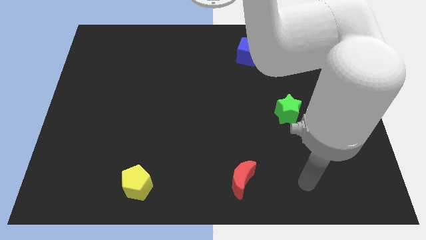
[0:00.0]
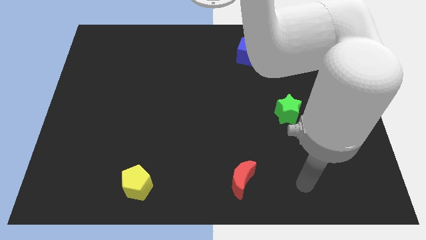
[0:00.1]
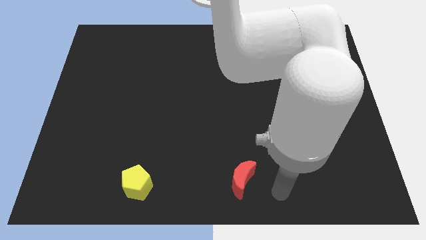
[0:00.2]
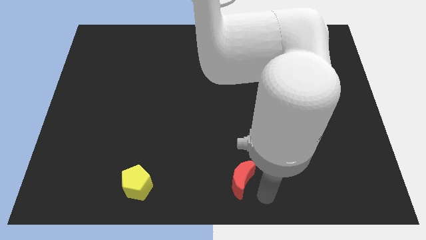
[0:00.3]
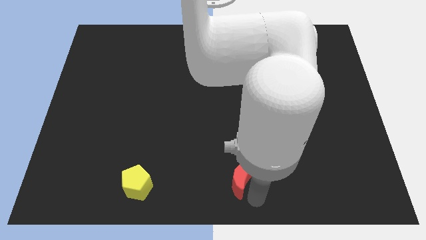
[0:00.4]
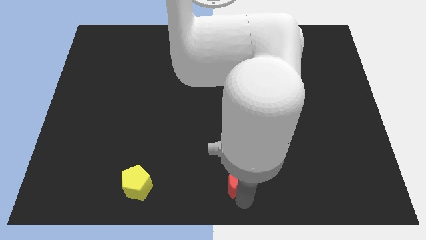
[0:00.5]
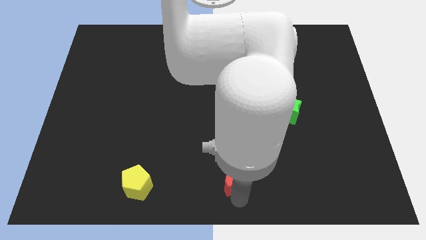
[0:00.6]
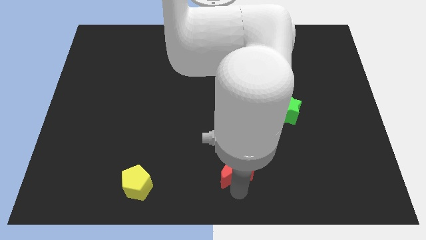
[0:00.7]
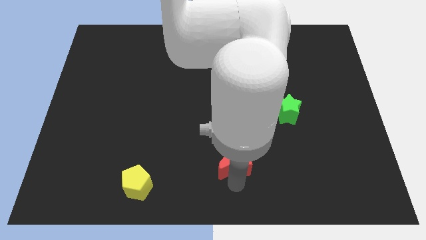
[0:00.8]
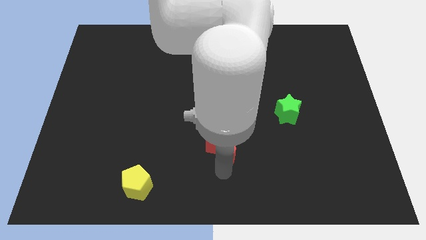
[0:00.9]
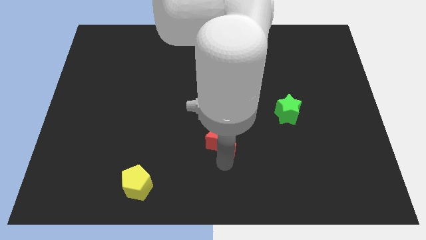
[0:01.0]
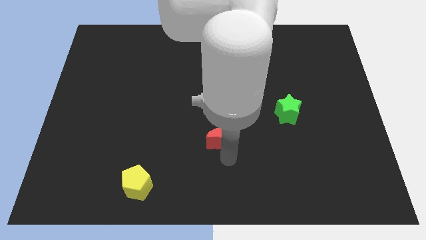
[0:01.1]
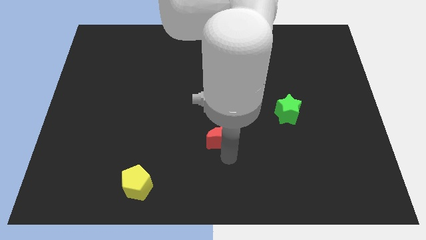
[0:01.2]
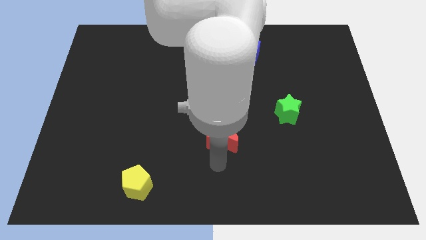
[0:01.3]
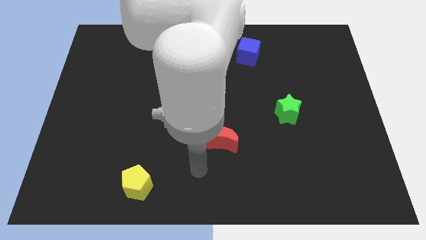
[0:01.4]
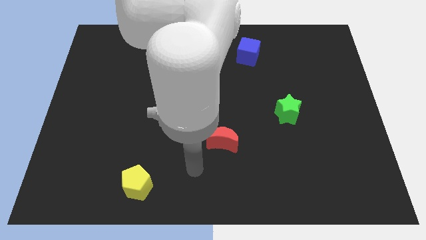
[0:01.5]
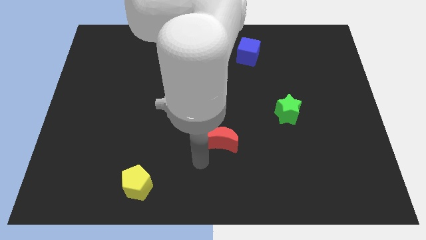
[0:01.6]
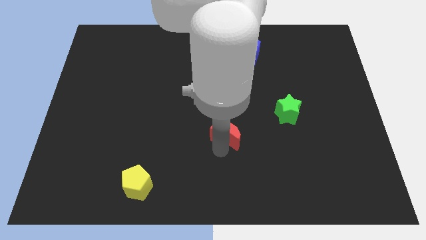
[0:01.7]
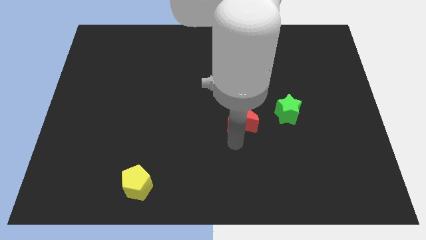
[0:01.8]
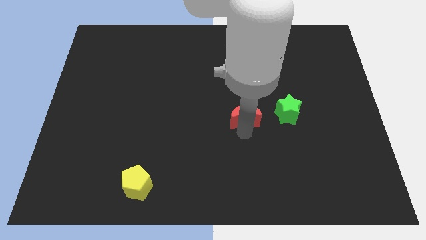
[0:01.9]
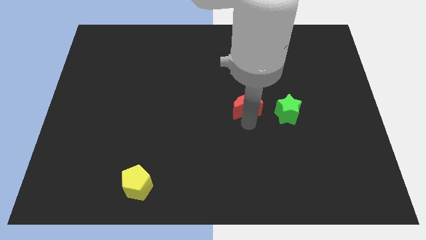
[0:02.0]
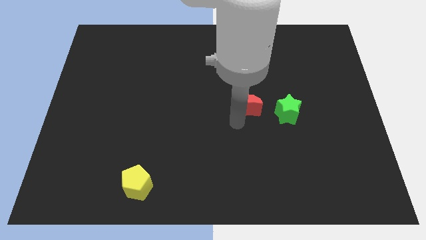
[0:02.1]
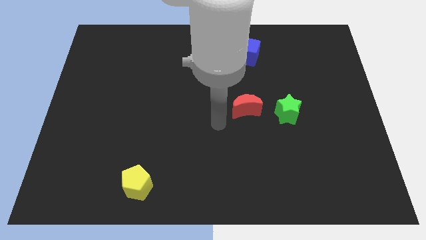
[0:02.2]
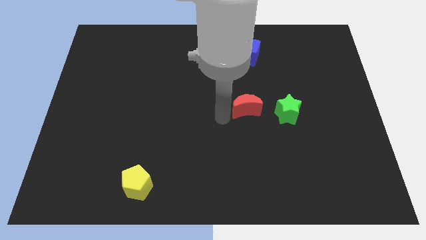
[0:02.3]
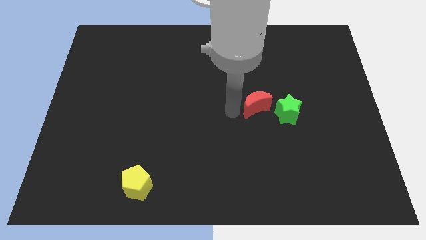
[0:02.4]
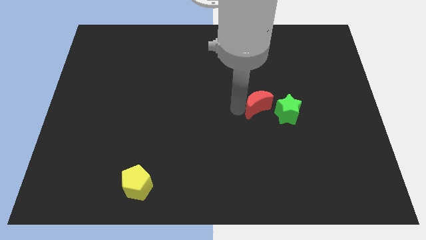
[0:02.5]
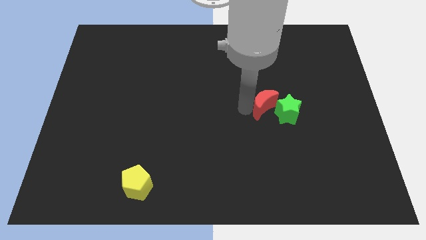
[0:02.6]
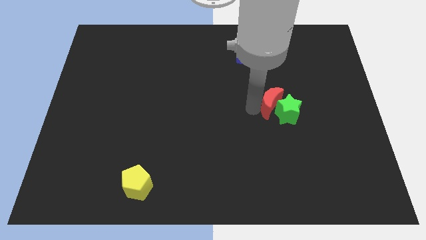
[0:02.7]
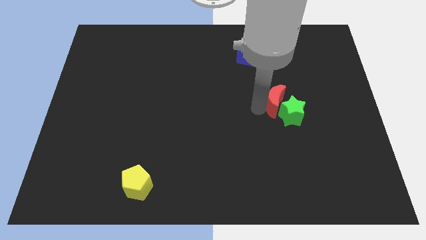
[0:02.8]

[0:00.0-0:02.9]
move the red moon close to the green star

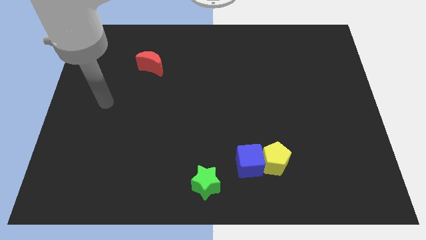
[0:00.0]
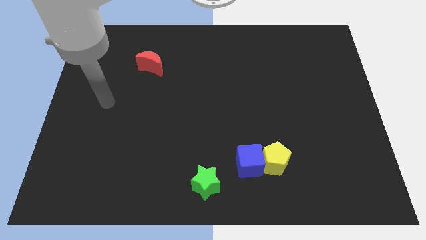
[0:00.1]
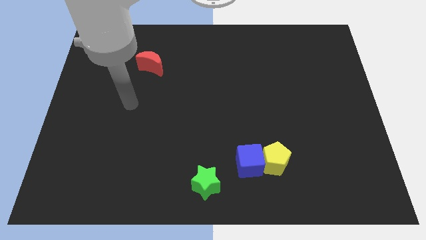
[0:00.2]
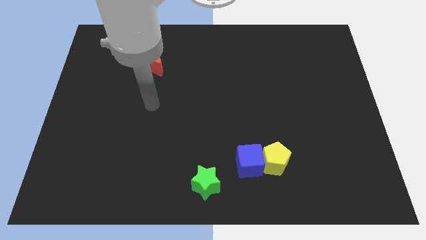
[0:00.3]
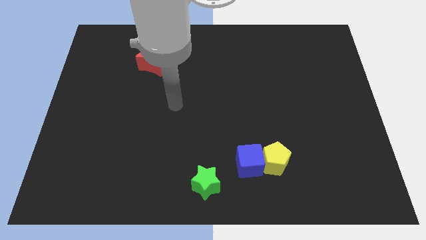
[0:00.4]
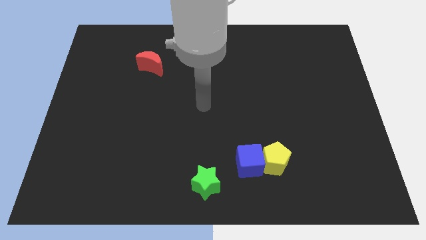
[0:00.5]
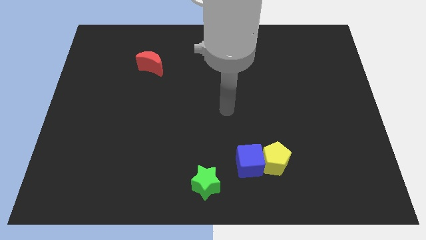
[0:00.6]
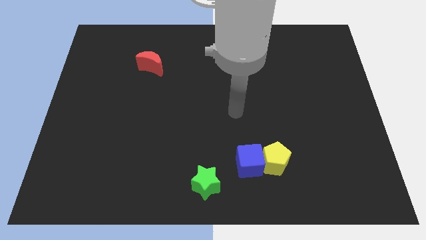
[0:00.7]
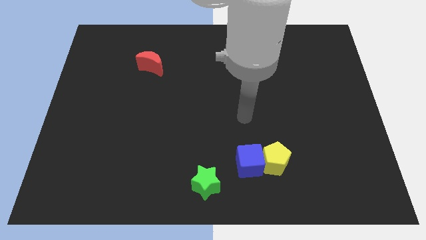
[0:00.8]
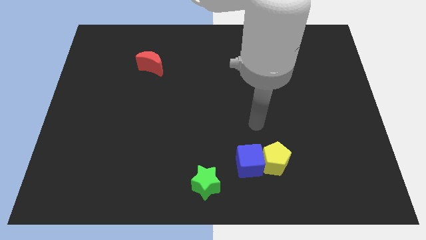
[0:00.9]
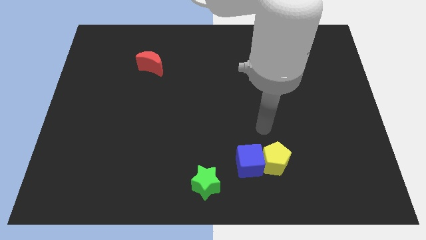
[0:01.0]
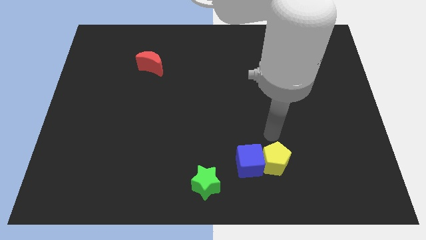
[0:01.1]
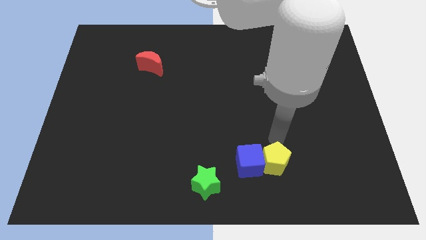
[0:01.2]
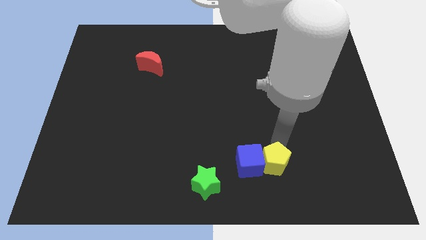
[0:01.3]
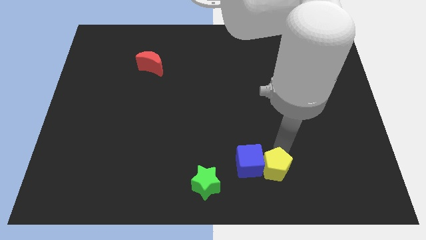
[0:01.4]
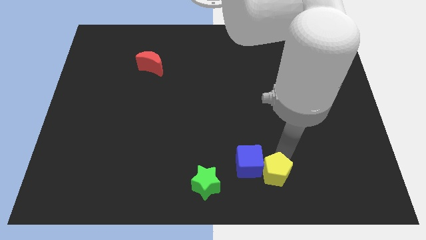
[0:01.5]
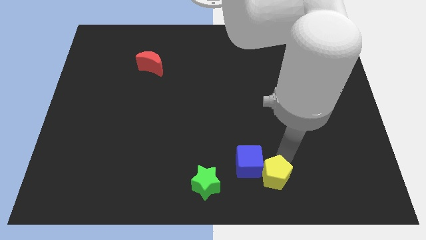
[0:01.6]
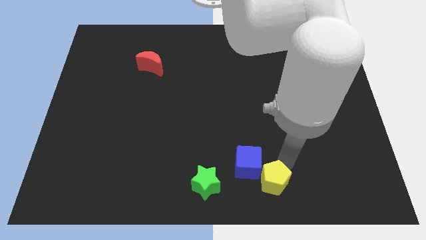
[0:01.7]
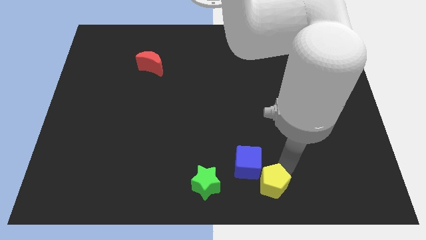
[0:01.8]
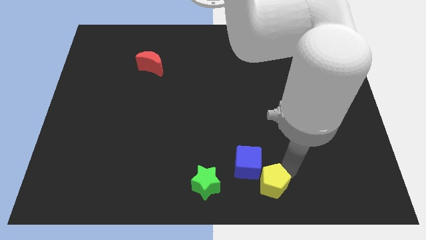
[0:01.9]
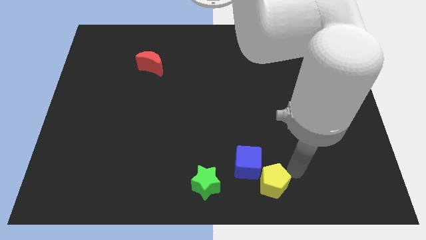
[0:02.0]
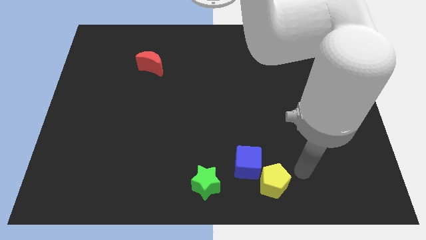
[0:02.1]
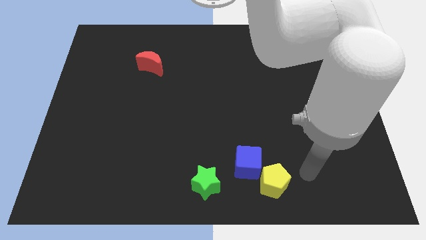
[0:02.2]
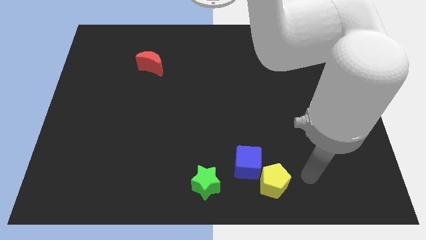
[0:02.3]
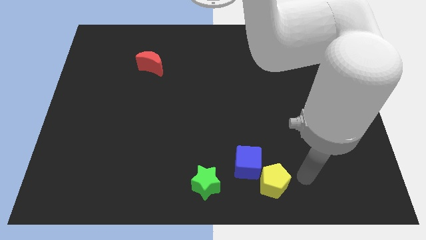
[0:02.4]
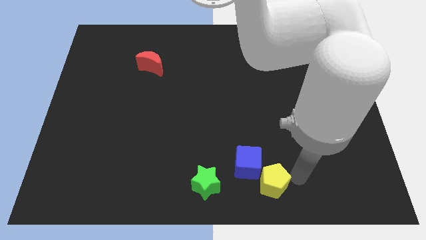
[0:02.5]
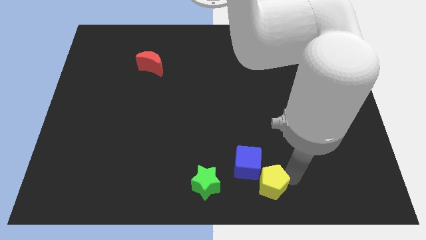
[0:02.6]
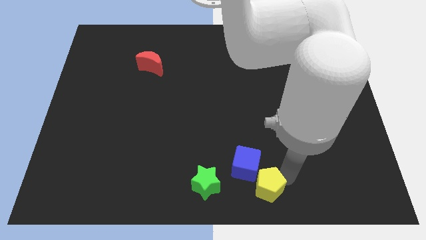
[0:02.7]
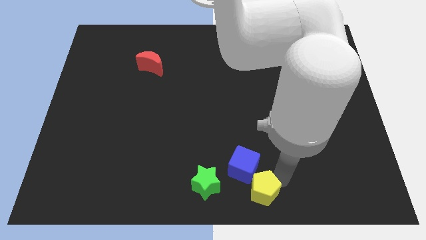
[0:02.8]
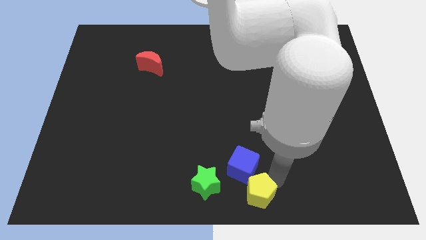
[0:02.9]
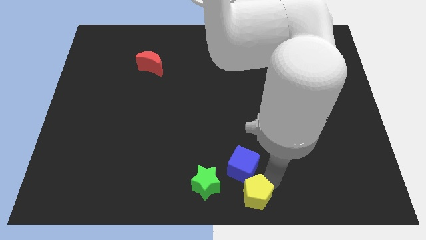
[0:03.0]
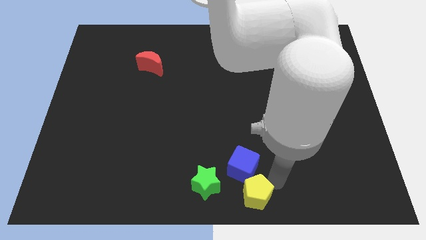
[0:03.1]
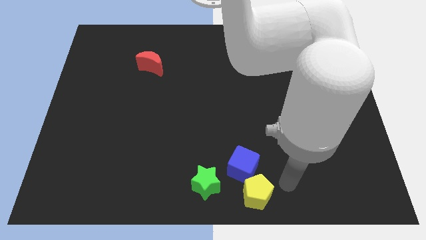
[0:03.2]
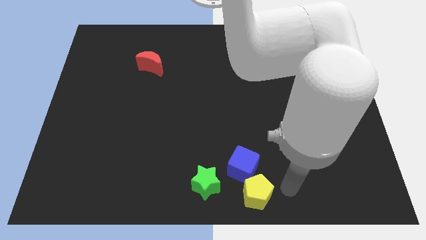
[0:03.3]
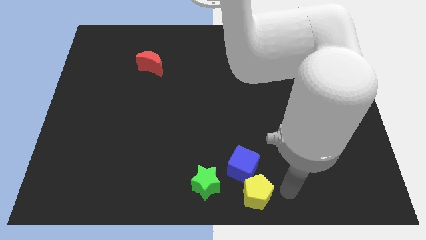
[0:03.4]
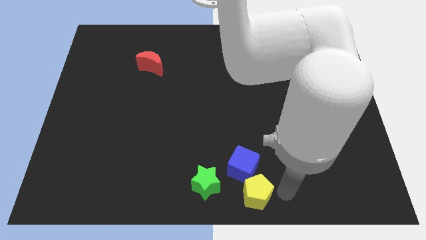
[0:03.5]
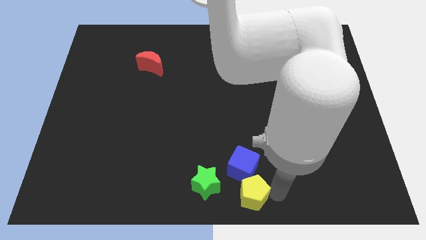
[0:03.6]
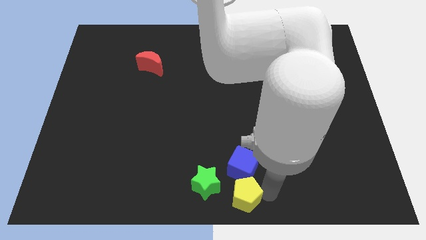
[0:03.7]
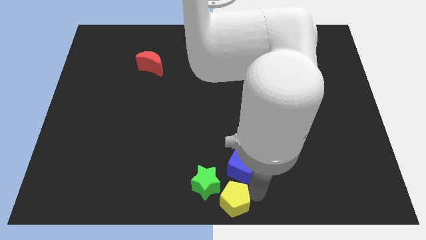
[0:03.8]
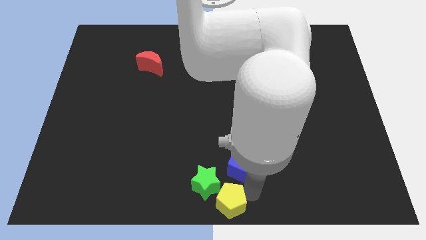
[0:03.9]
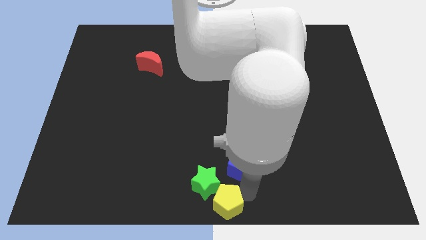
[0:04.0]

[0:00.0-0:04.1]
slide the pentagon to the green block

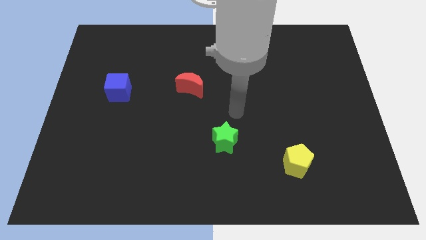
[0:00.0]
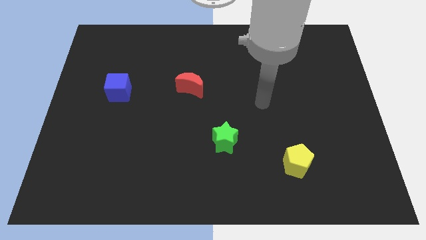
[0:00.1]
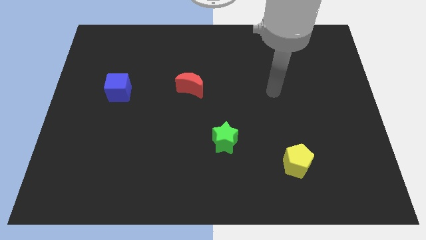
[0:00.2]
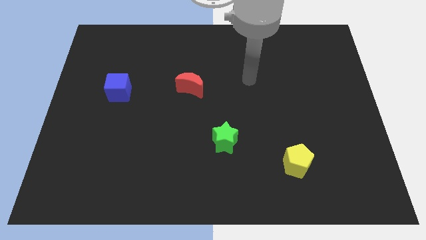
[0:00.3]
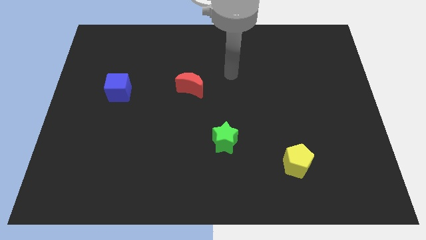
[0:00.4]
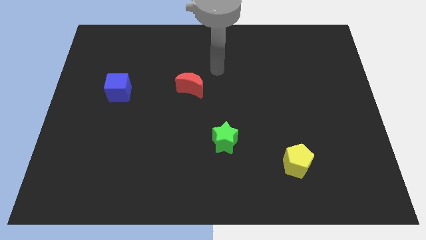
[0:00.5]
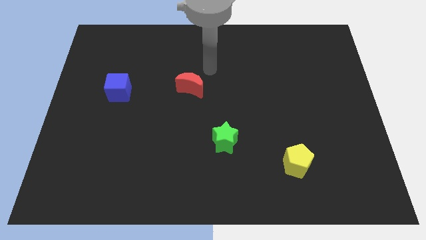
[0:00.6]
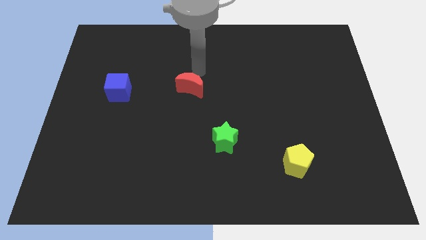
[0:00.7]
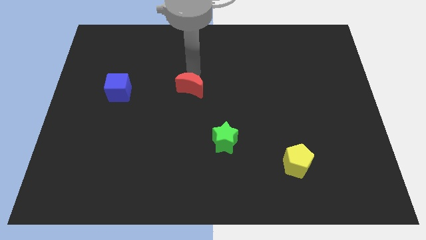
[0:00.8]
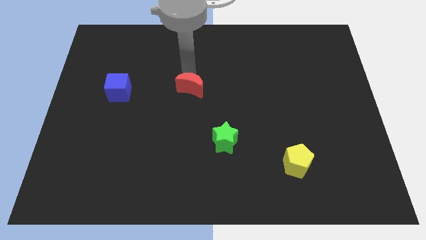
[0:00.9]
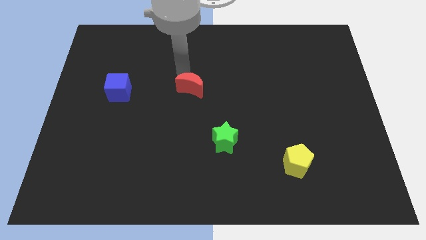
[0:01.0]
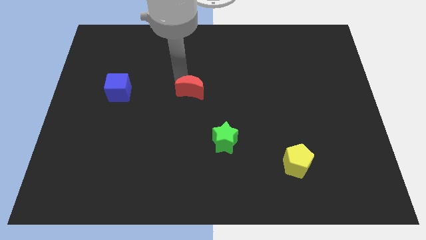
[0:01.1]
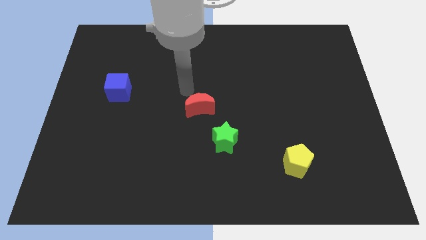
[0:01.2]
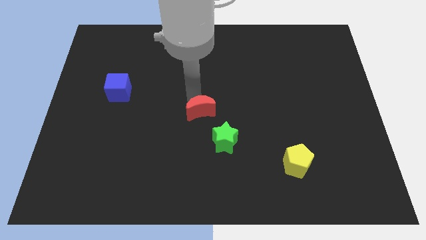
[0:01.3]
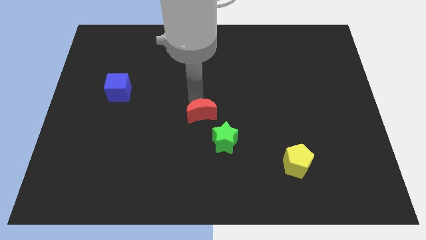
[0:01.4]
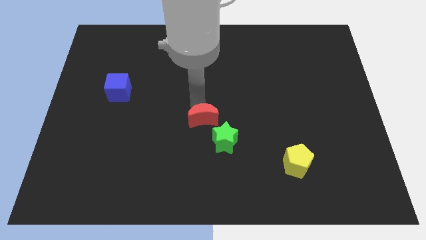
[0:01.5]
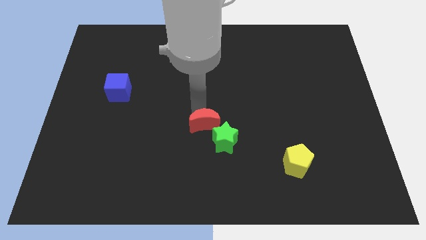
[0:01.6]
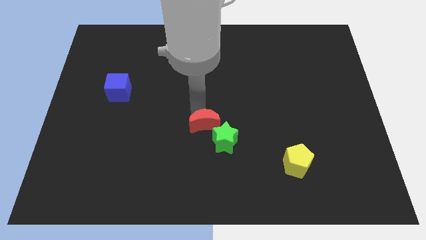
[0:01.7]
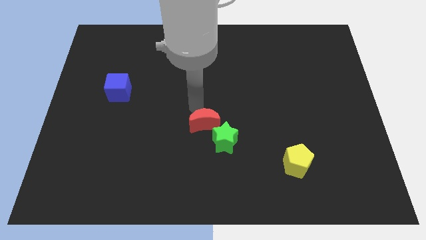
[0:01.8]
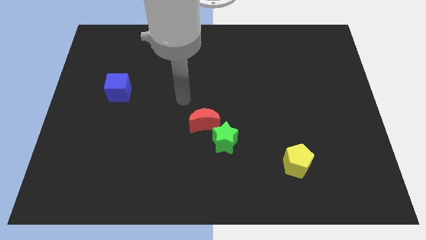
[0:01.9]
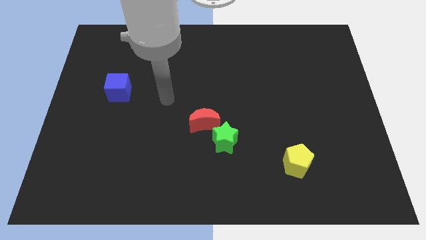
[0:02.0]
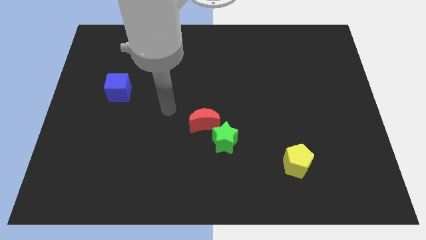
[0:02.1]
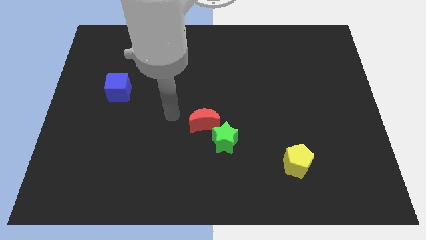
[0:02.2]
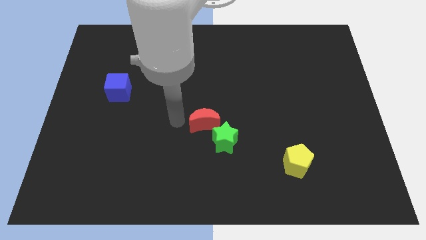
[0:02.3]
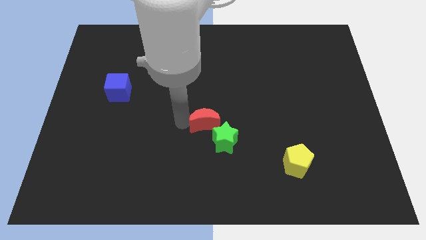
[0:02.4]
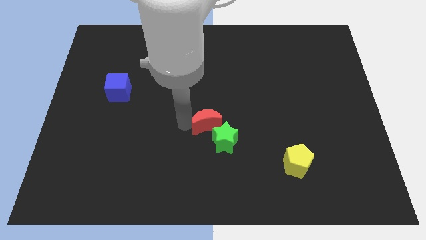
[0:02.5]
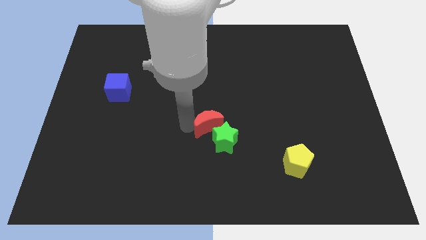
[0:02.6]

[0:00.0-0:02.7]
put the moon to the green block
